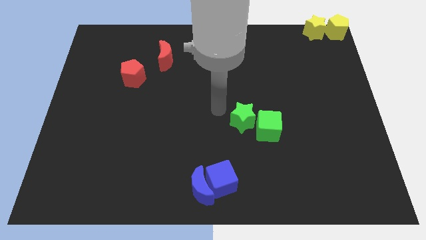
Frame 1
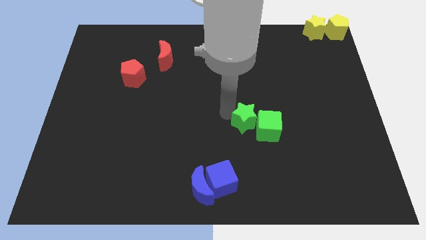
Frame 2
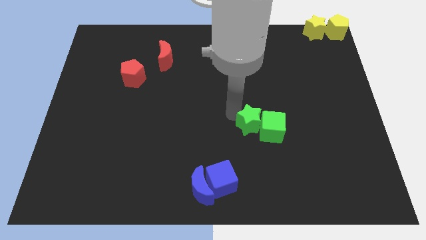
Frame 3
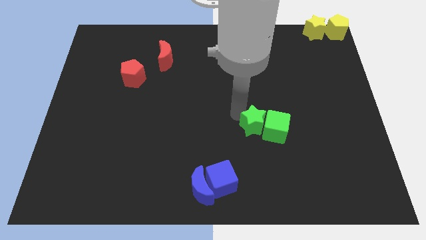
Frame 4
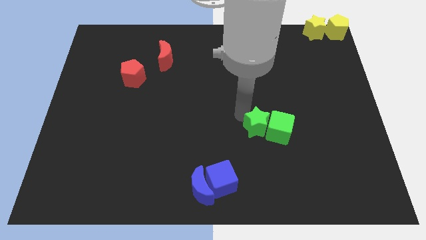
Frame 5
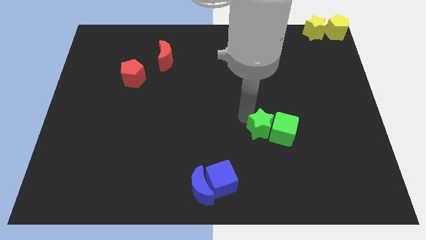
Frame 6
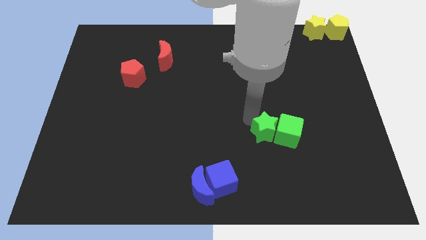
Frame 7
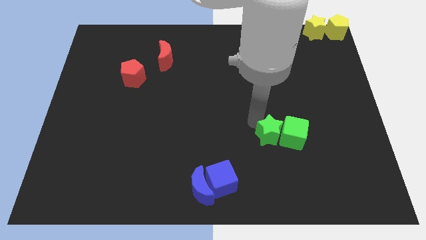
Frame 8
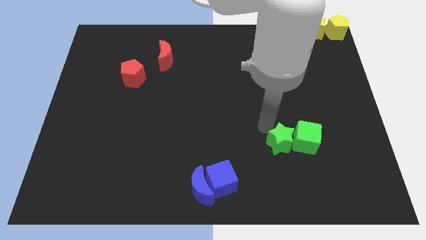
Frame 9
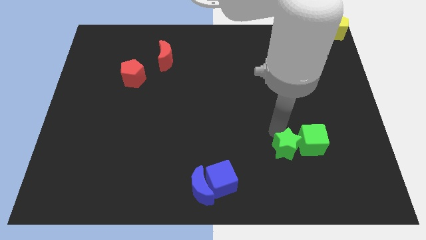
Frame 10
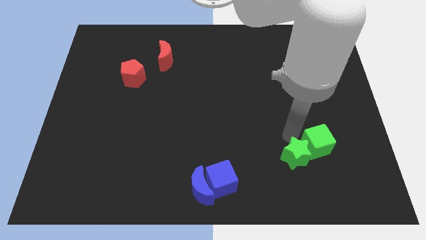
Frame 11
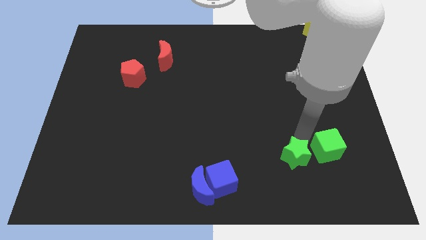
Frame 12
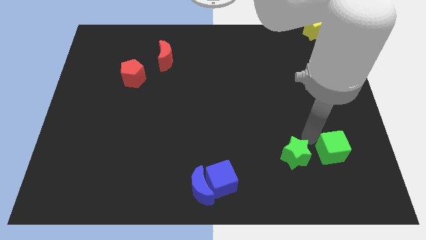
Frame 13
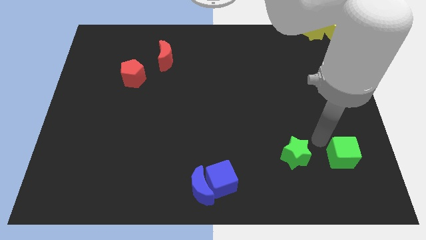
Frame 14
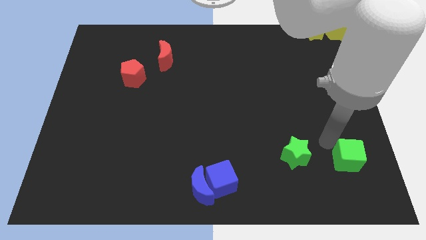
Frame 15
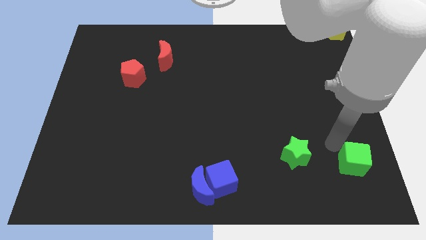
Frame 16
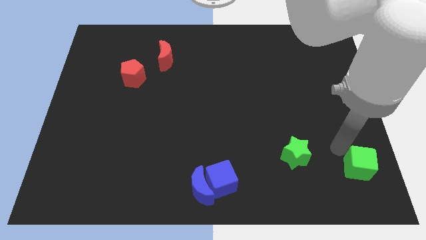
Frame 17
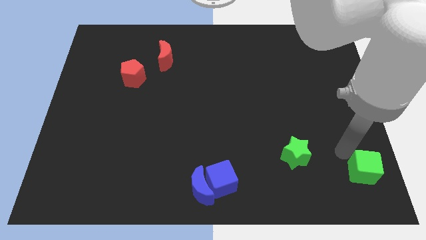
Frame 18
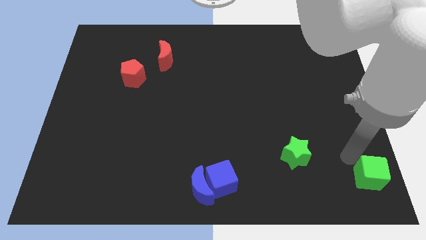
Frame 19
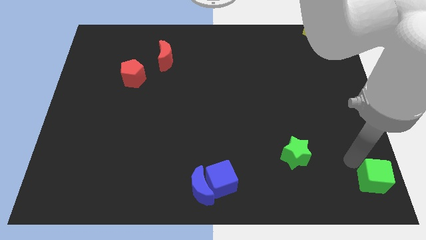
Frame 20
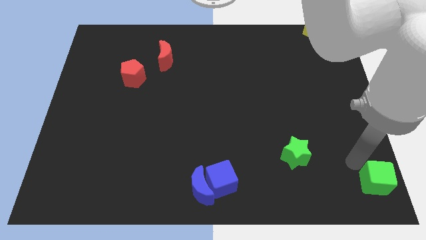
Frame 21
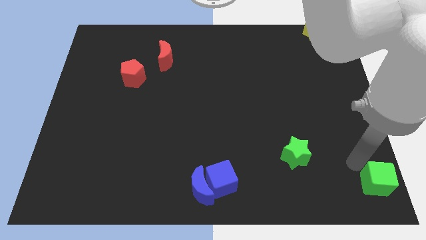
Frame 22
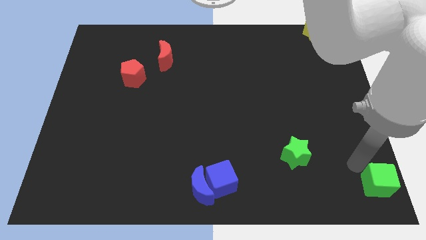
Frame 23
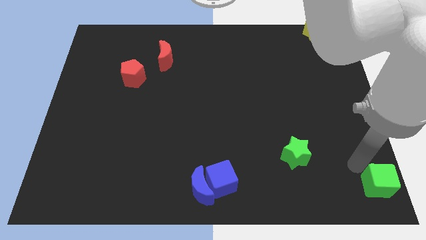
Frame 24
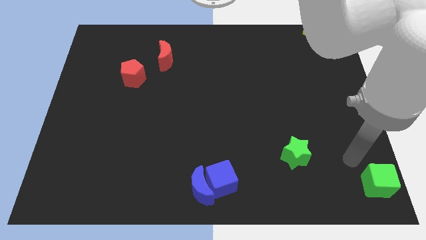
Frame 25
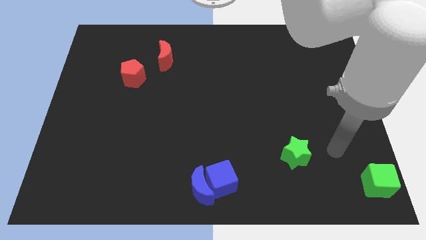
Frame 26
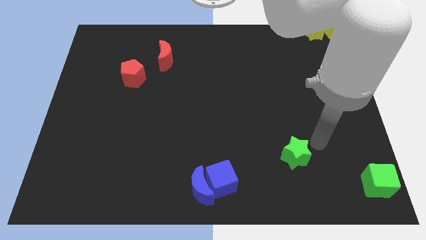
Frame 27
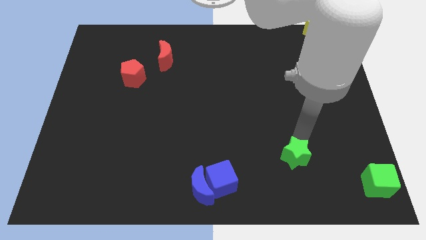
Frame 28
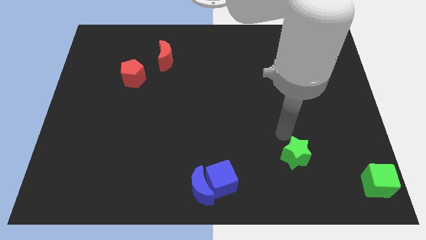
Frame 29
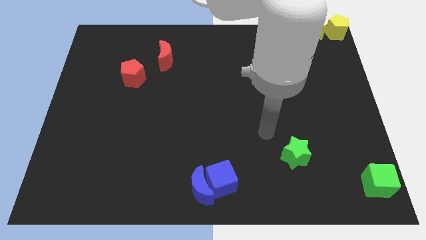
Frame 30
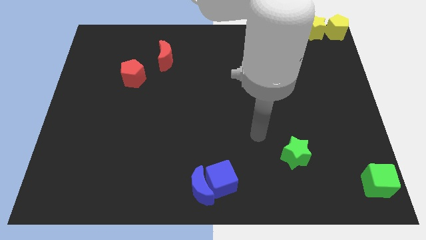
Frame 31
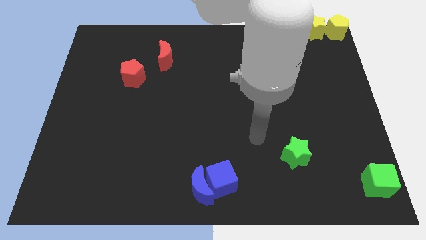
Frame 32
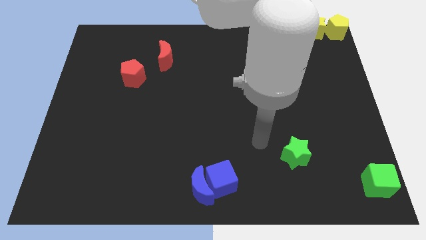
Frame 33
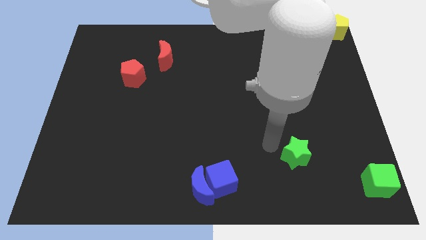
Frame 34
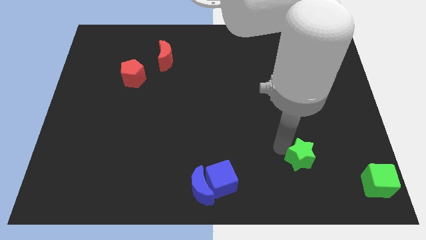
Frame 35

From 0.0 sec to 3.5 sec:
separate the green star and the green cube

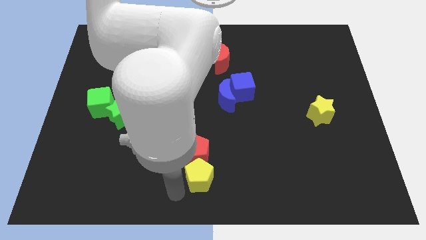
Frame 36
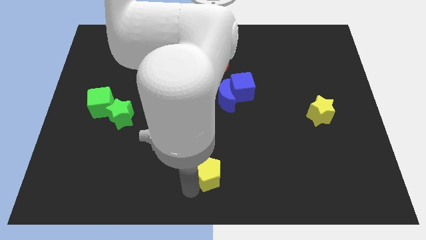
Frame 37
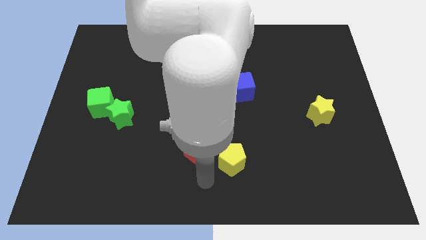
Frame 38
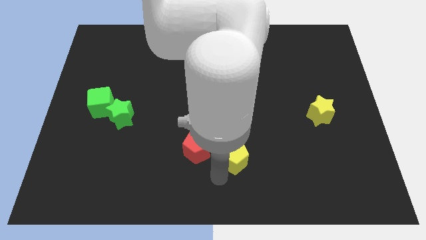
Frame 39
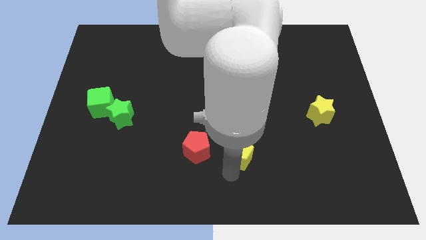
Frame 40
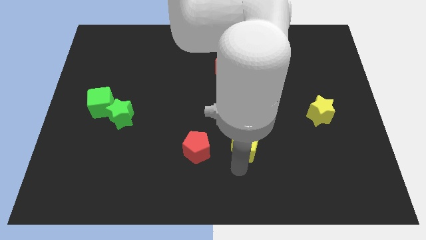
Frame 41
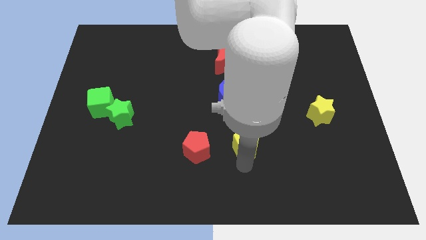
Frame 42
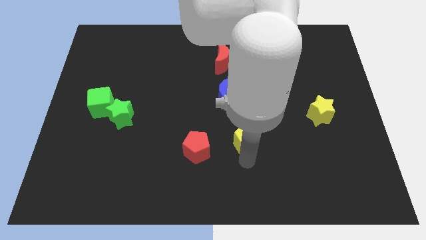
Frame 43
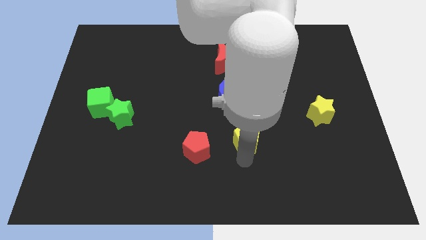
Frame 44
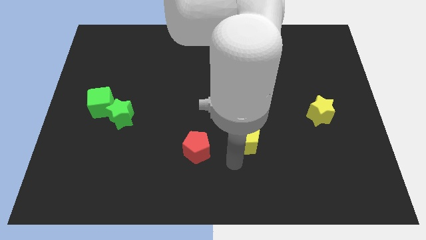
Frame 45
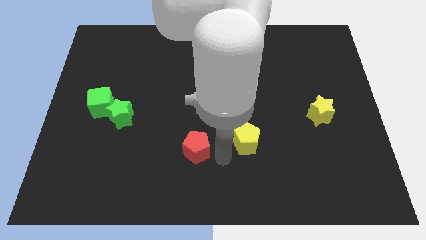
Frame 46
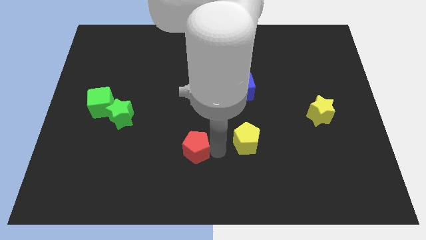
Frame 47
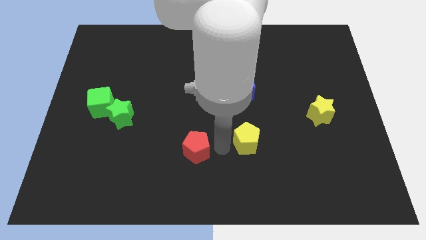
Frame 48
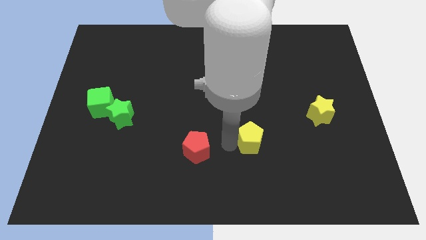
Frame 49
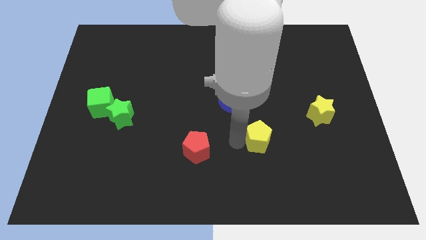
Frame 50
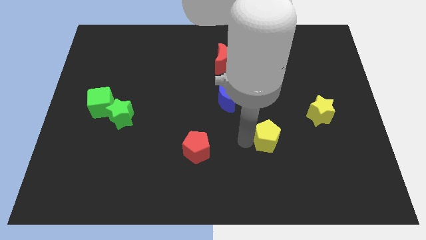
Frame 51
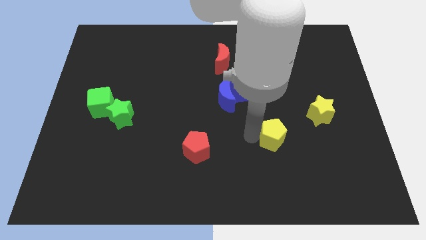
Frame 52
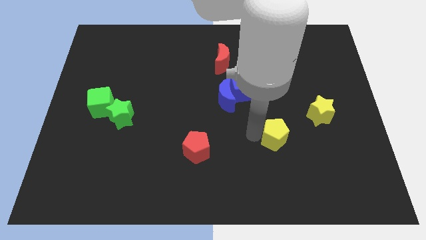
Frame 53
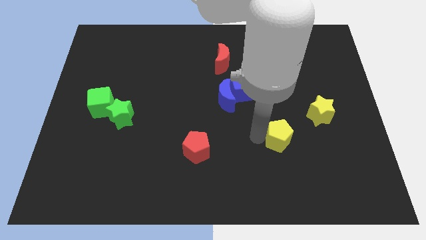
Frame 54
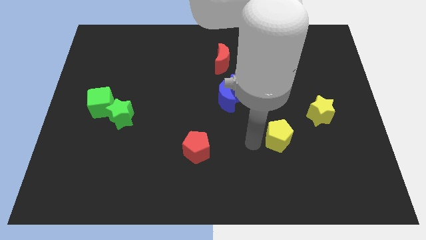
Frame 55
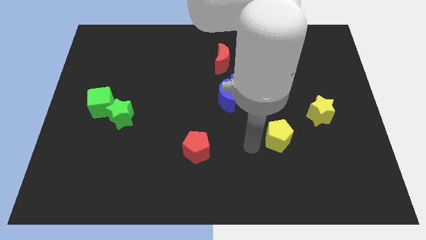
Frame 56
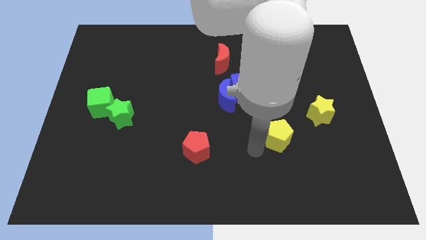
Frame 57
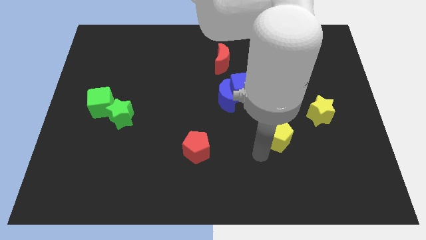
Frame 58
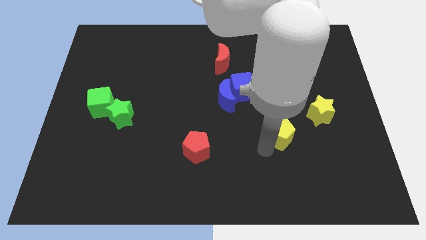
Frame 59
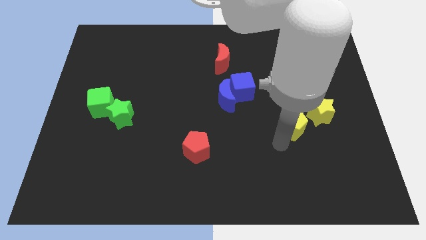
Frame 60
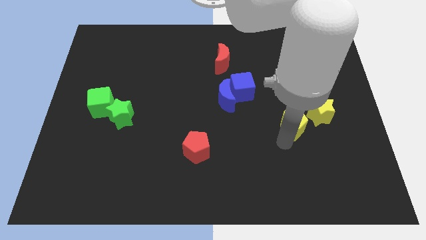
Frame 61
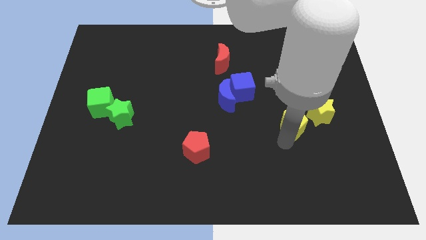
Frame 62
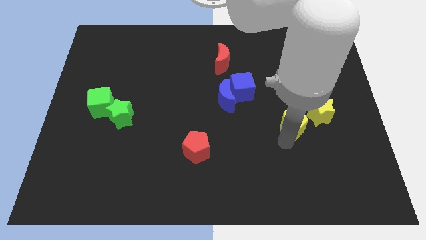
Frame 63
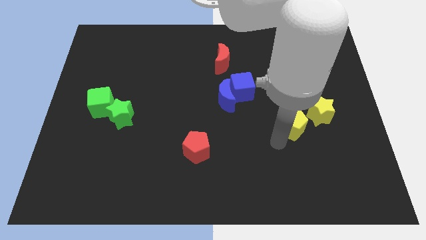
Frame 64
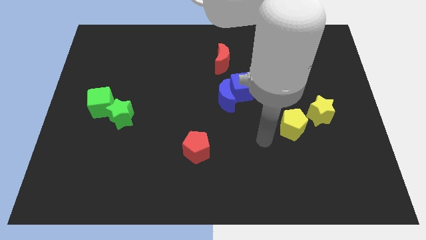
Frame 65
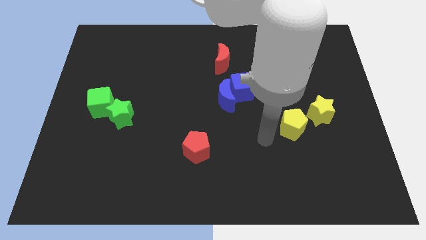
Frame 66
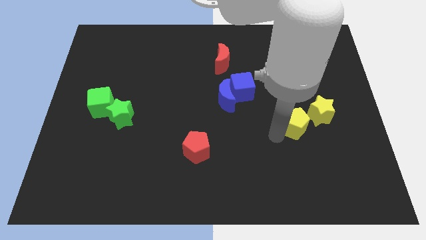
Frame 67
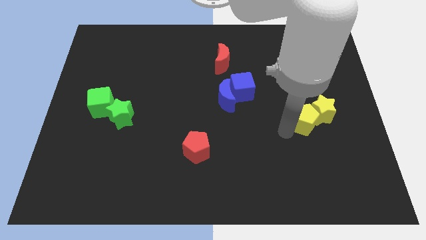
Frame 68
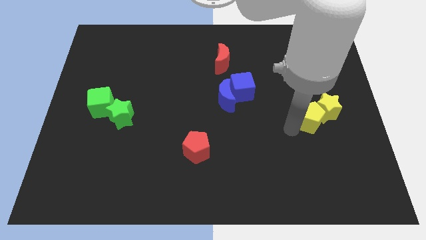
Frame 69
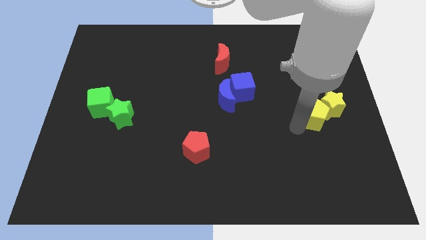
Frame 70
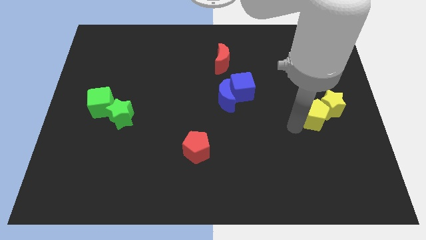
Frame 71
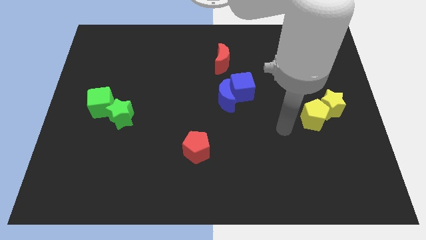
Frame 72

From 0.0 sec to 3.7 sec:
place yellow pentagon left to the yellow star

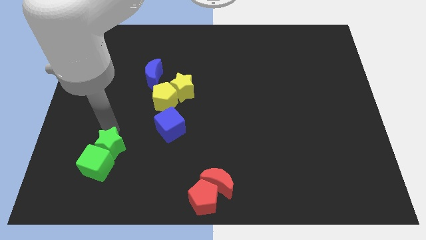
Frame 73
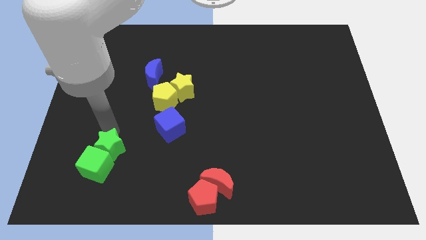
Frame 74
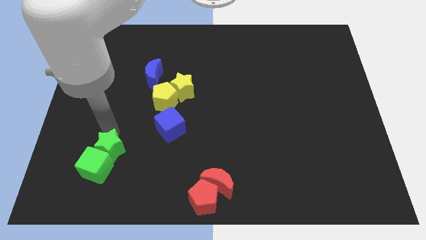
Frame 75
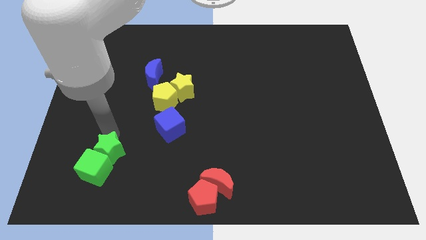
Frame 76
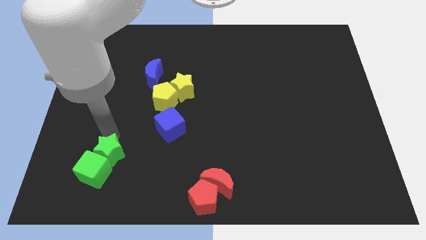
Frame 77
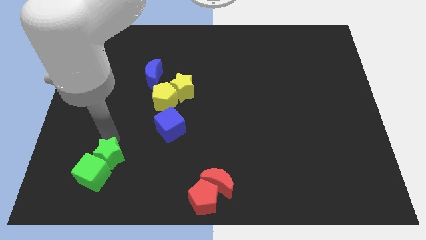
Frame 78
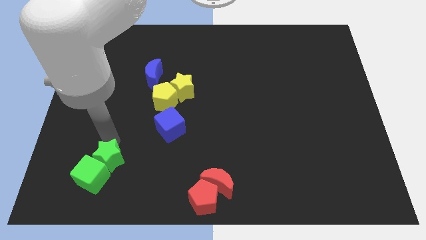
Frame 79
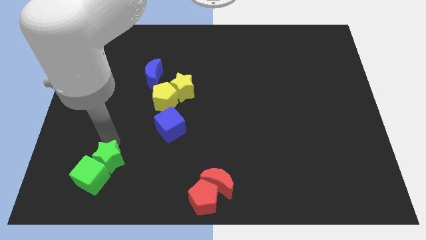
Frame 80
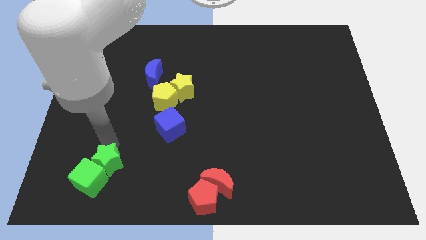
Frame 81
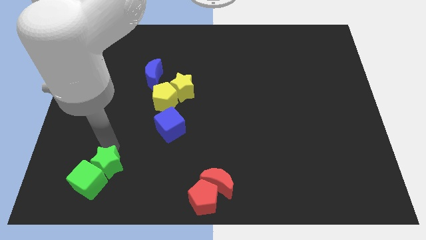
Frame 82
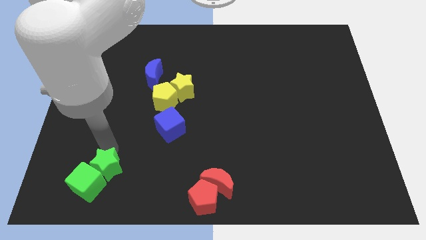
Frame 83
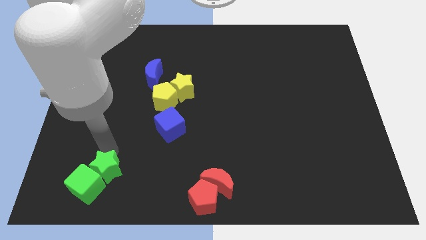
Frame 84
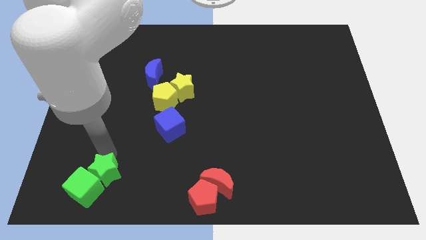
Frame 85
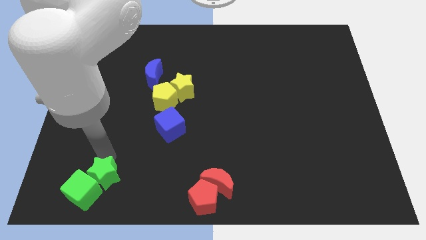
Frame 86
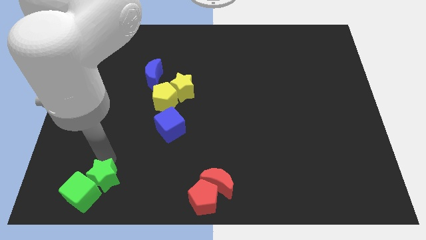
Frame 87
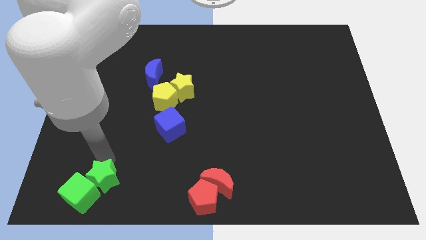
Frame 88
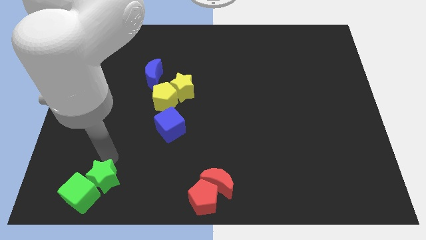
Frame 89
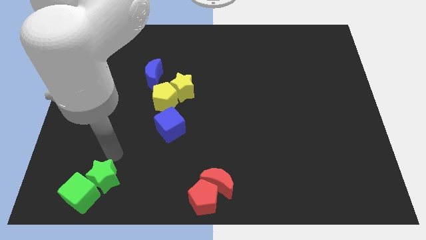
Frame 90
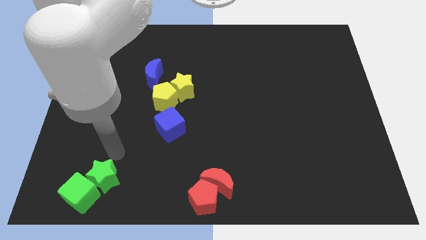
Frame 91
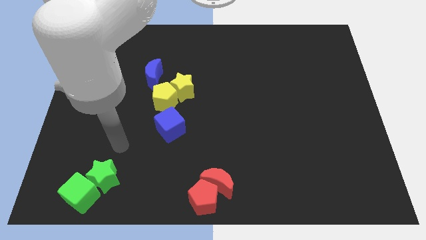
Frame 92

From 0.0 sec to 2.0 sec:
put the green blocks in the bottom left
